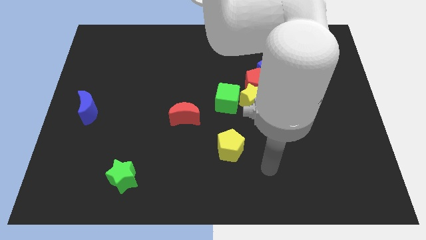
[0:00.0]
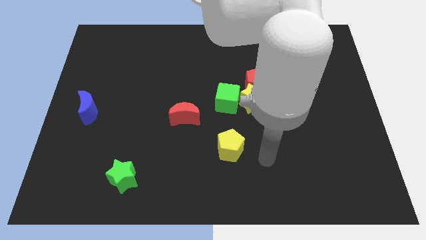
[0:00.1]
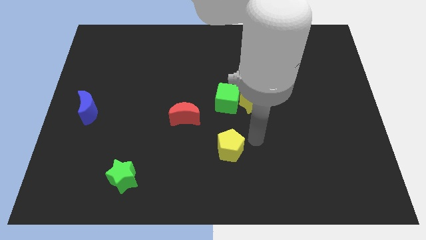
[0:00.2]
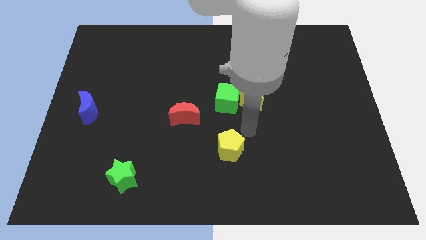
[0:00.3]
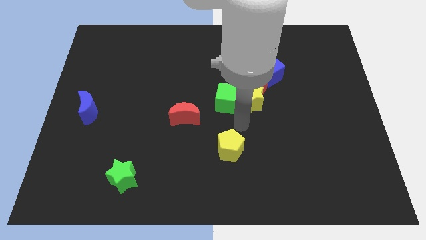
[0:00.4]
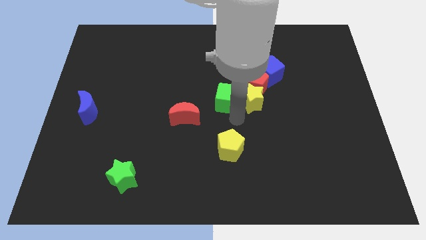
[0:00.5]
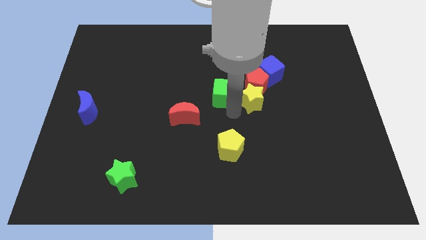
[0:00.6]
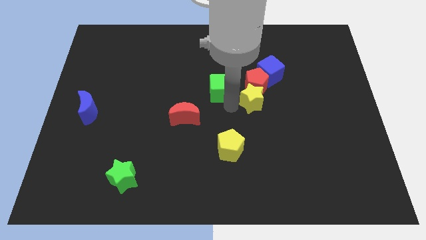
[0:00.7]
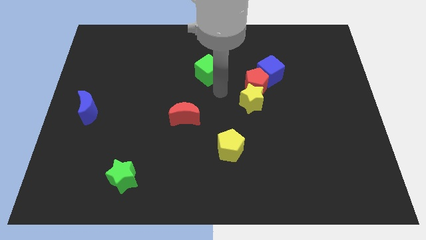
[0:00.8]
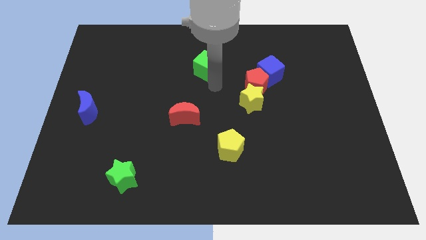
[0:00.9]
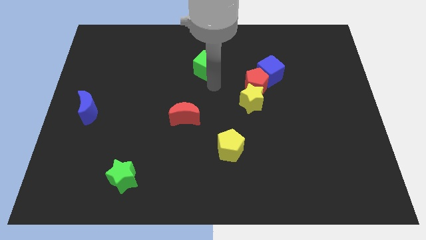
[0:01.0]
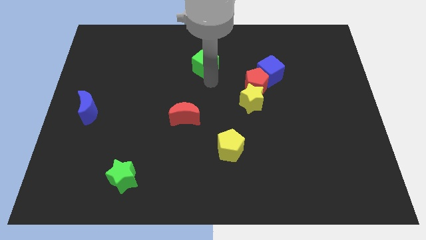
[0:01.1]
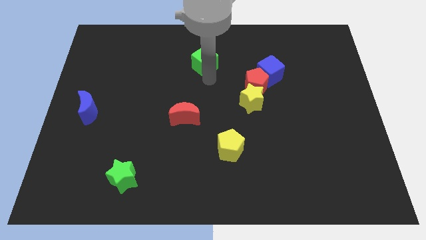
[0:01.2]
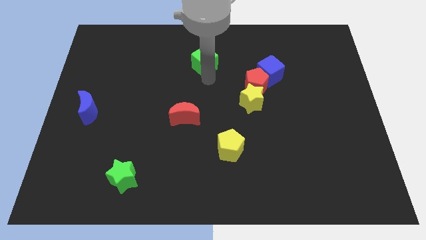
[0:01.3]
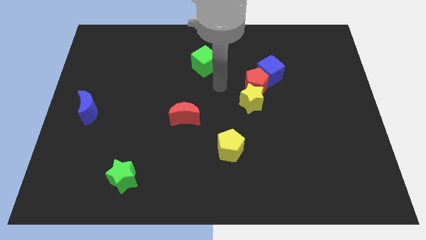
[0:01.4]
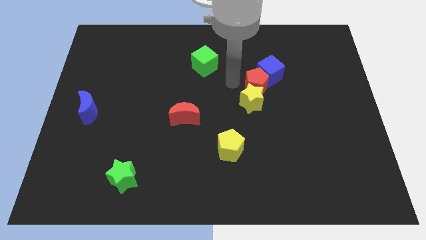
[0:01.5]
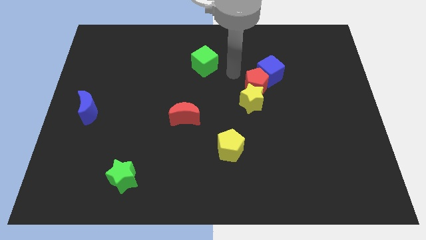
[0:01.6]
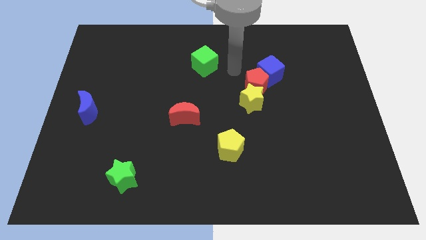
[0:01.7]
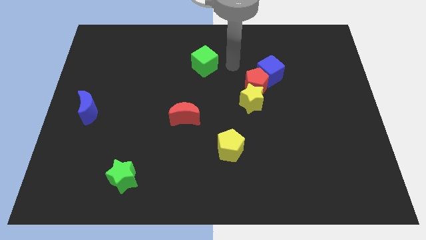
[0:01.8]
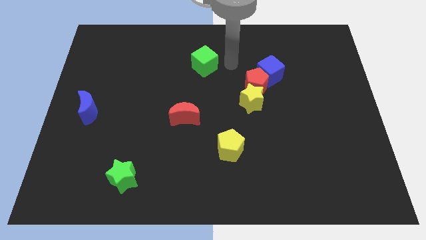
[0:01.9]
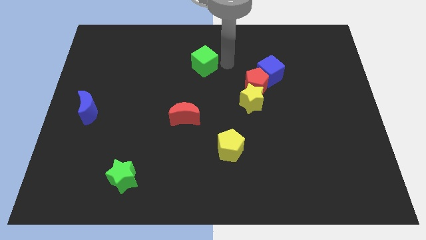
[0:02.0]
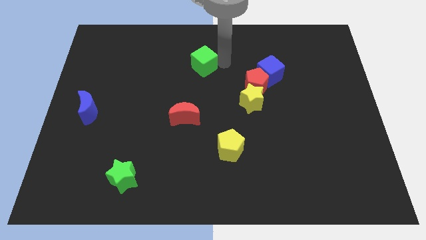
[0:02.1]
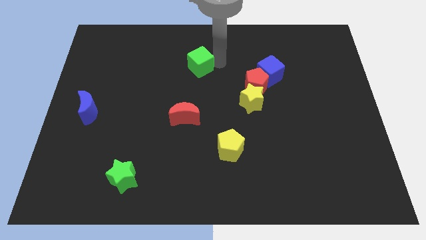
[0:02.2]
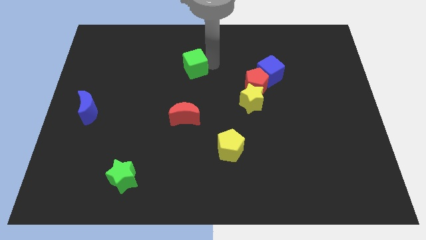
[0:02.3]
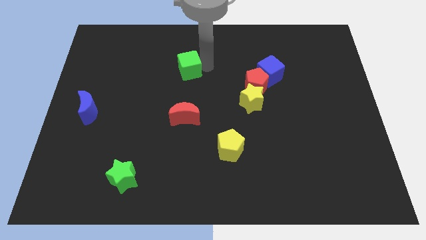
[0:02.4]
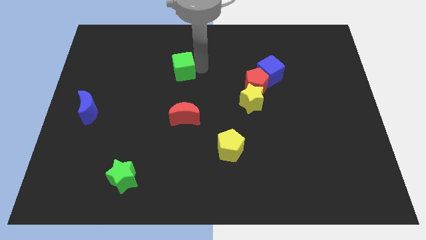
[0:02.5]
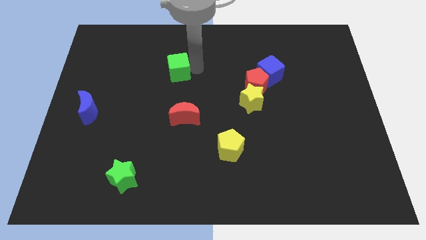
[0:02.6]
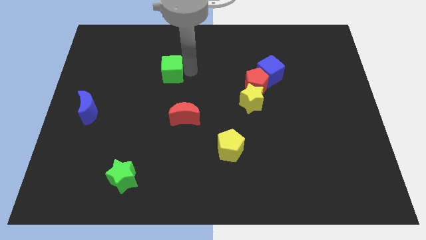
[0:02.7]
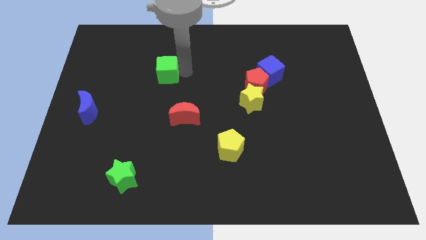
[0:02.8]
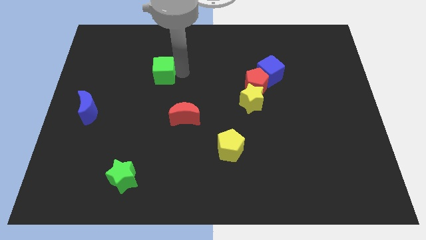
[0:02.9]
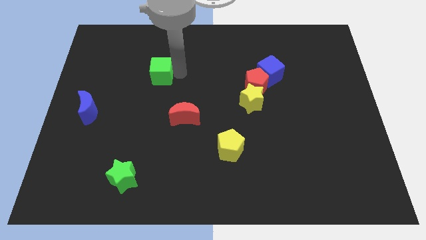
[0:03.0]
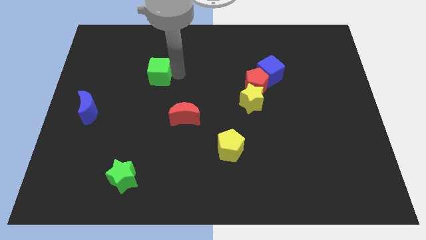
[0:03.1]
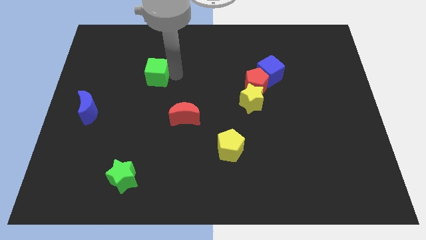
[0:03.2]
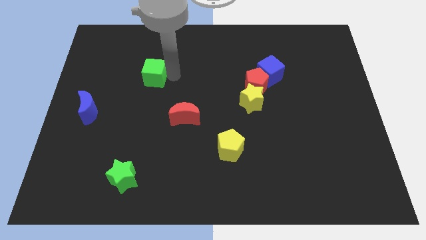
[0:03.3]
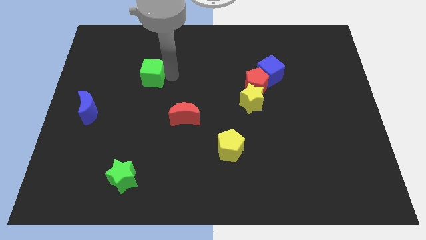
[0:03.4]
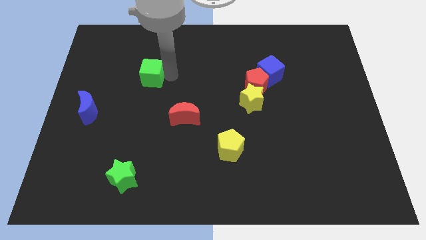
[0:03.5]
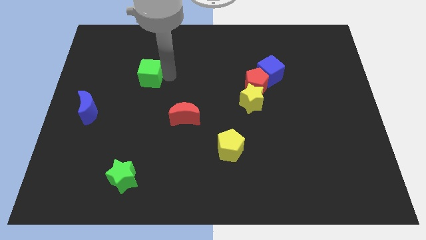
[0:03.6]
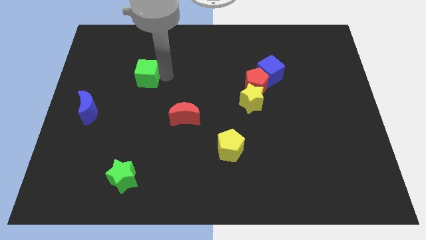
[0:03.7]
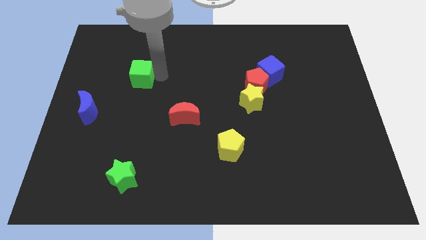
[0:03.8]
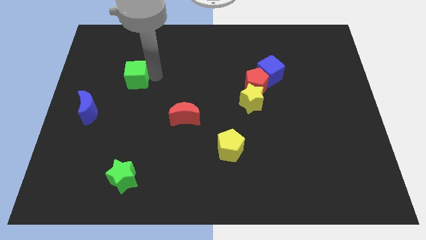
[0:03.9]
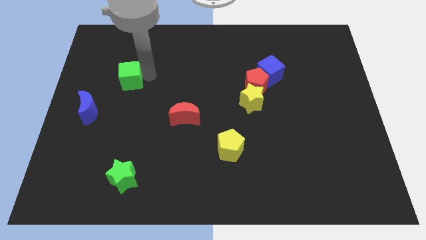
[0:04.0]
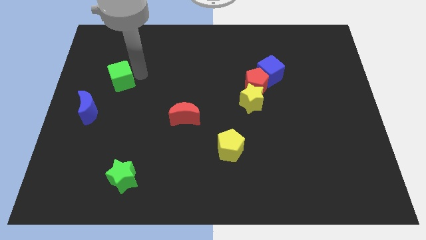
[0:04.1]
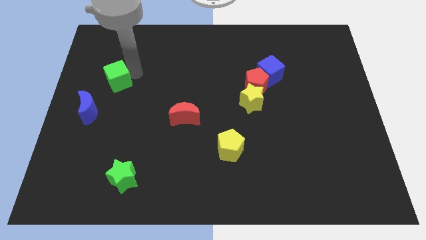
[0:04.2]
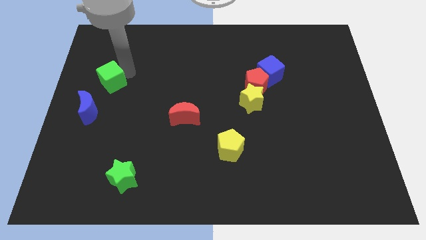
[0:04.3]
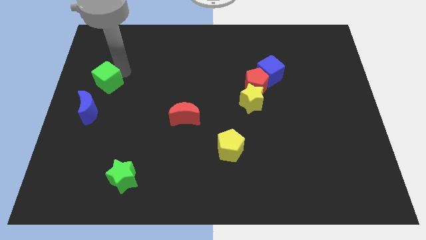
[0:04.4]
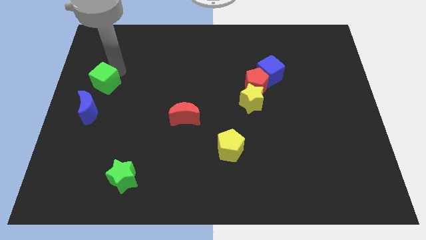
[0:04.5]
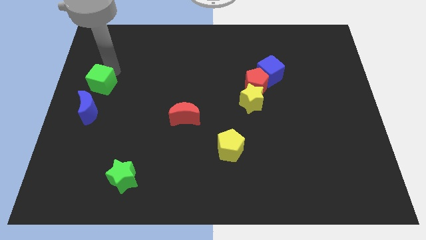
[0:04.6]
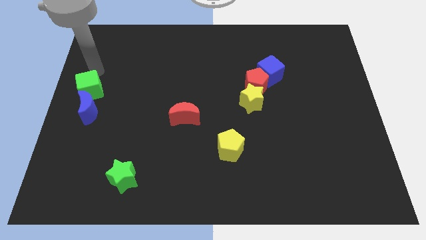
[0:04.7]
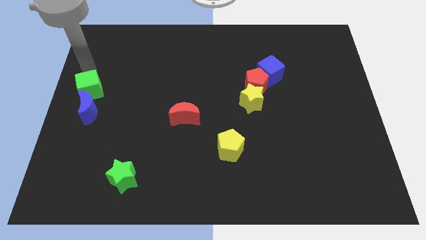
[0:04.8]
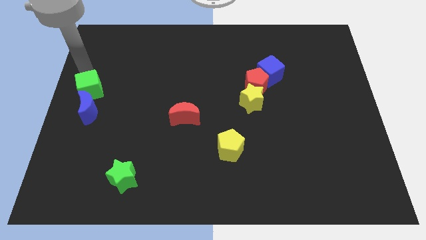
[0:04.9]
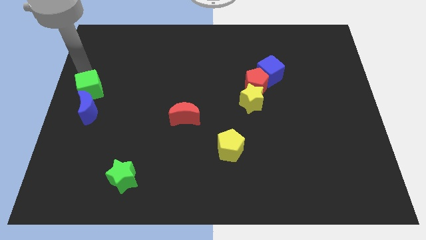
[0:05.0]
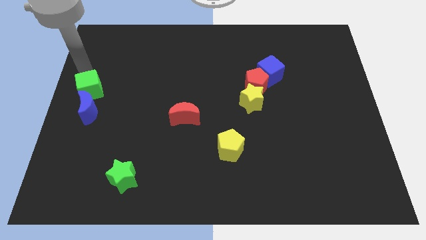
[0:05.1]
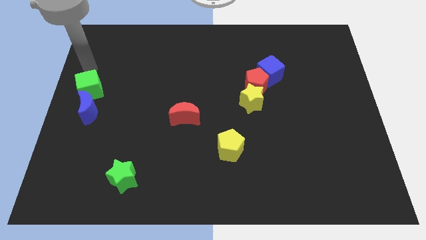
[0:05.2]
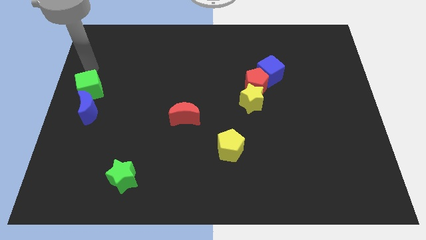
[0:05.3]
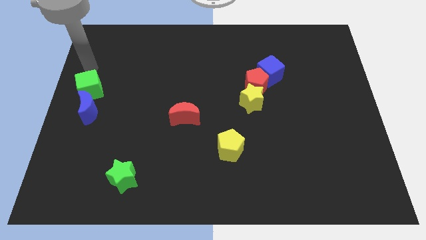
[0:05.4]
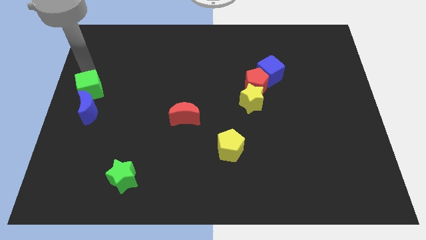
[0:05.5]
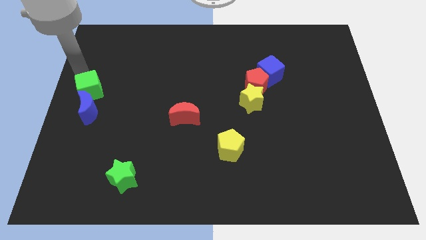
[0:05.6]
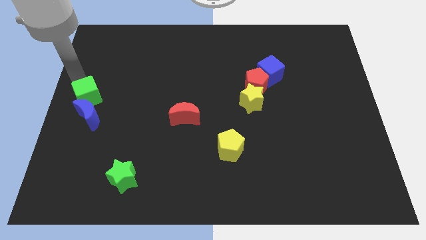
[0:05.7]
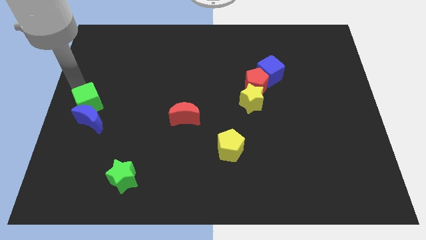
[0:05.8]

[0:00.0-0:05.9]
push the green cube to the blue moon

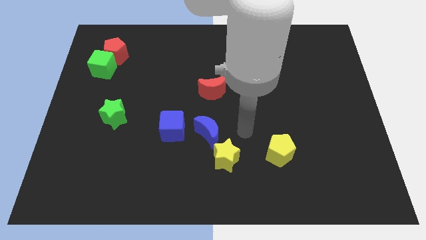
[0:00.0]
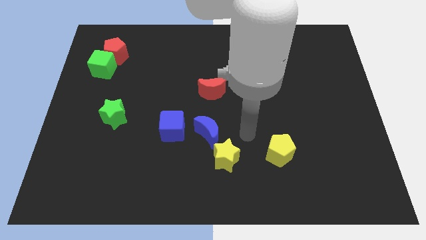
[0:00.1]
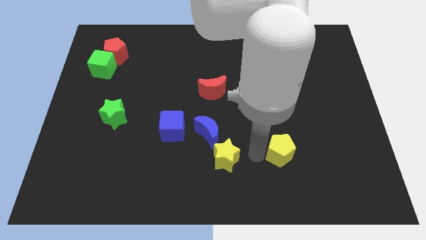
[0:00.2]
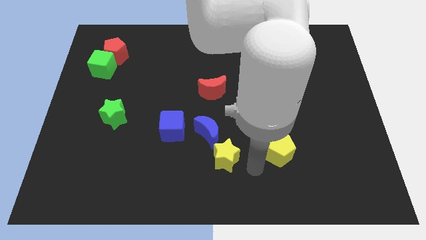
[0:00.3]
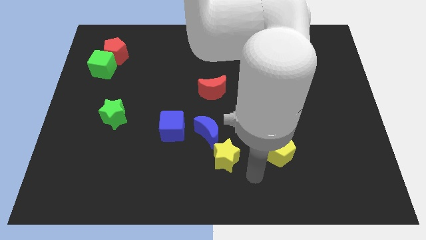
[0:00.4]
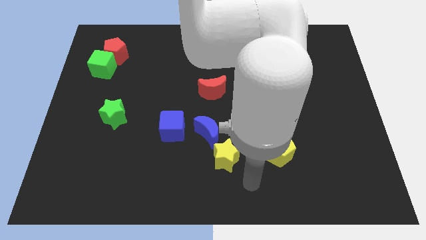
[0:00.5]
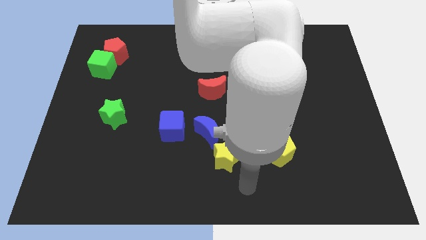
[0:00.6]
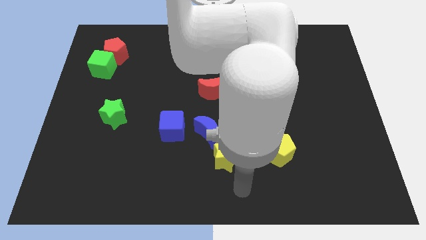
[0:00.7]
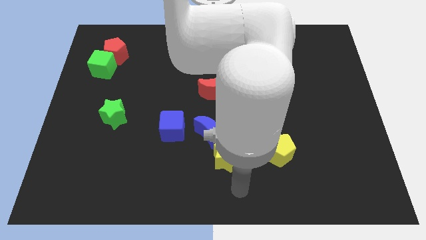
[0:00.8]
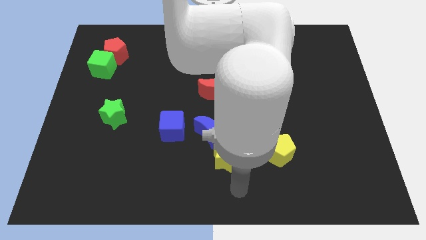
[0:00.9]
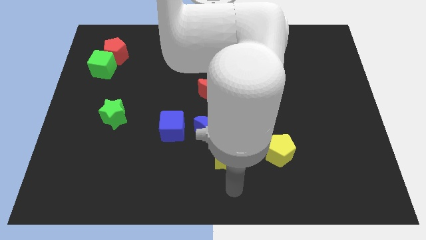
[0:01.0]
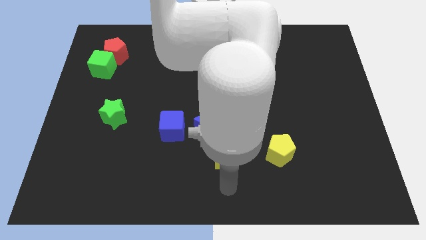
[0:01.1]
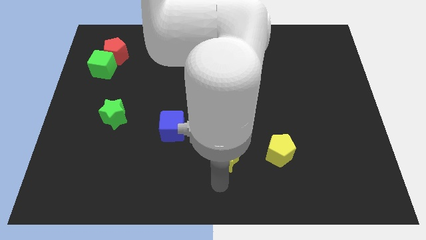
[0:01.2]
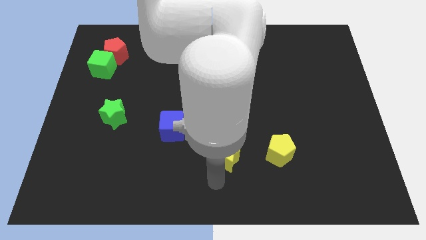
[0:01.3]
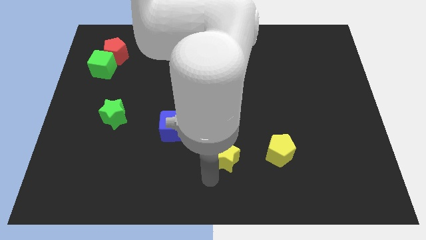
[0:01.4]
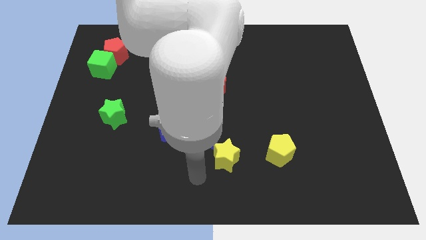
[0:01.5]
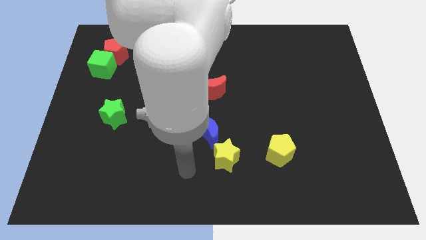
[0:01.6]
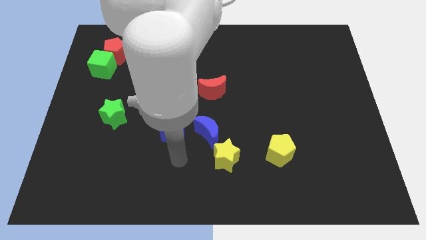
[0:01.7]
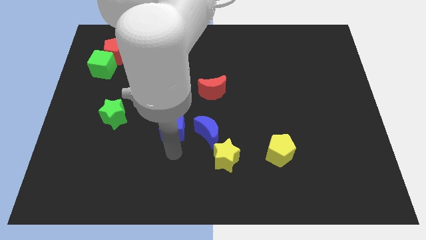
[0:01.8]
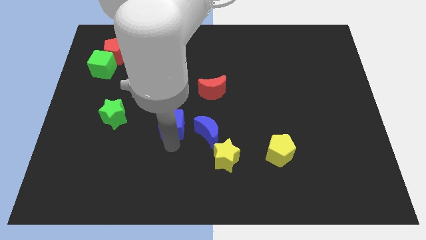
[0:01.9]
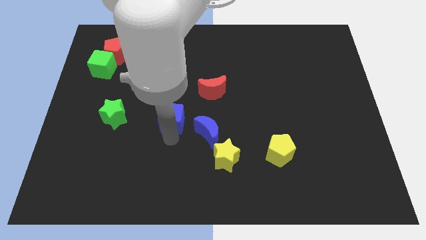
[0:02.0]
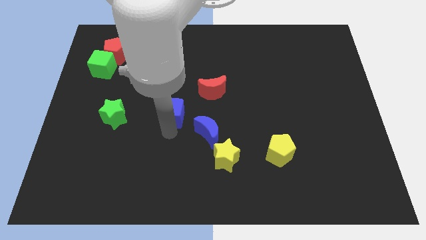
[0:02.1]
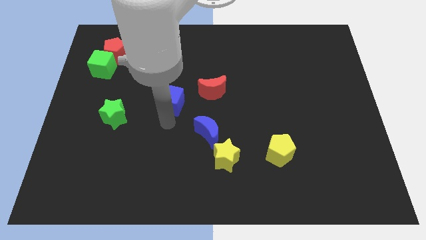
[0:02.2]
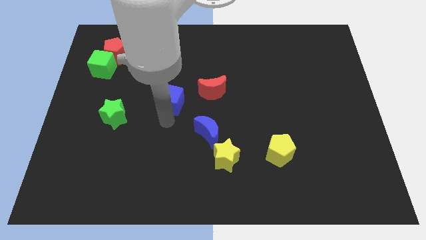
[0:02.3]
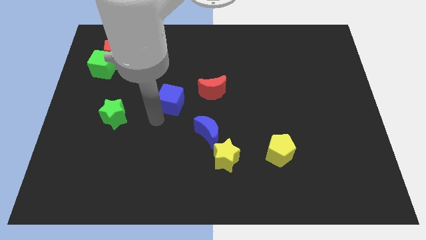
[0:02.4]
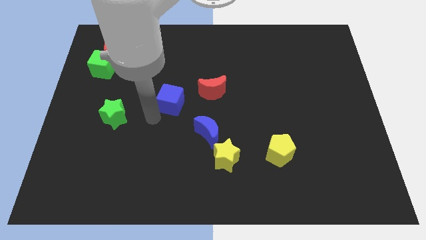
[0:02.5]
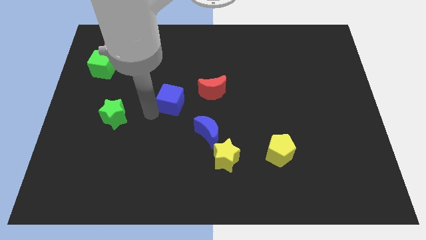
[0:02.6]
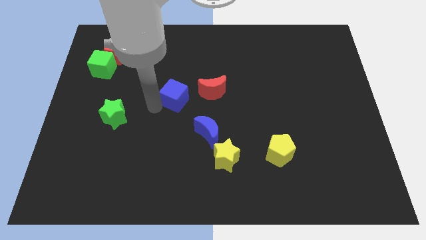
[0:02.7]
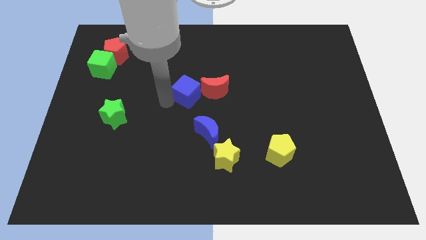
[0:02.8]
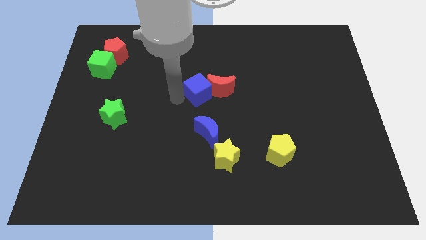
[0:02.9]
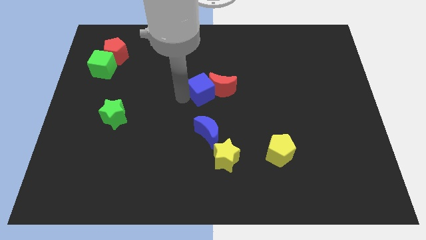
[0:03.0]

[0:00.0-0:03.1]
put the blue cube close to the red moon
